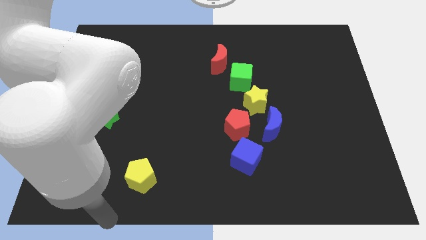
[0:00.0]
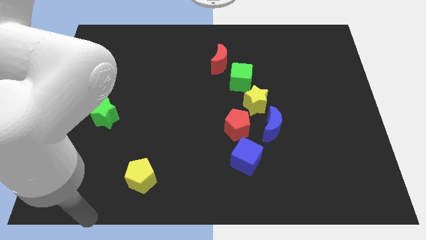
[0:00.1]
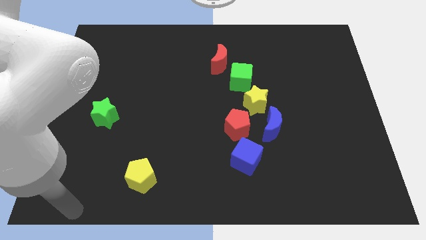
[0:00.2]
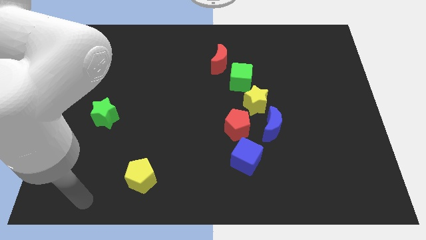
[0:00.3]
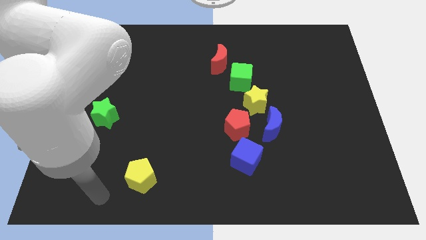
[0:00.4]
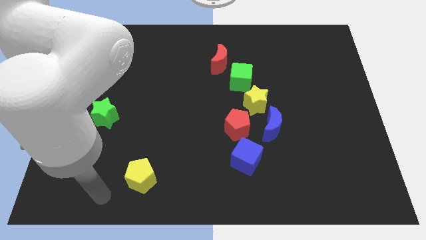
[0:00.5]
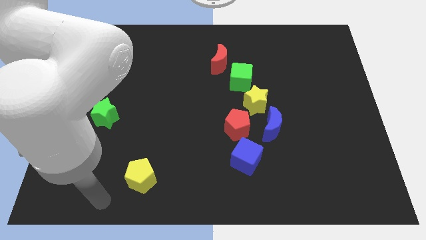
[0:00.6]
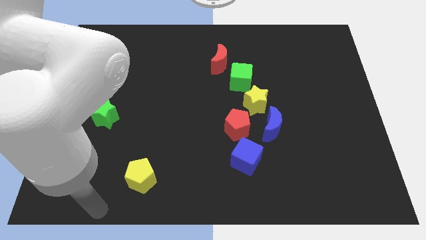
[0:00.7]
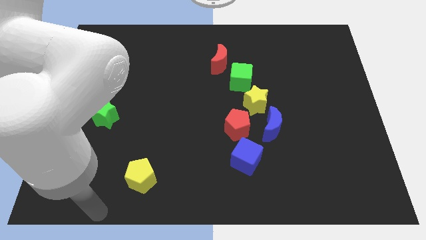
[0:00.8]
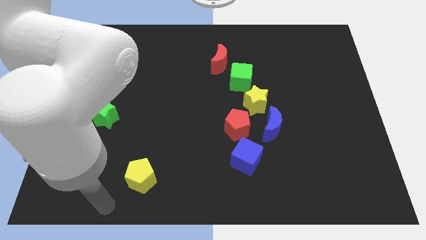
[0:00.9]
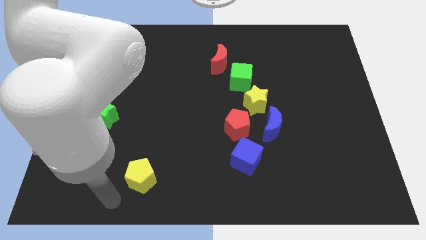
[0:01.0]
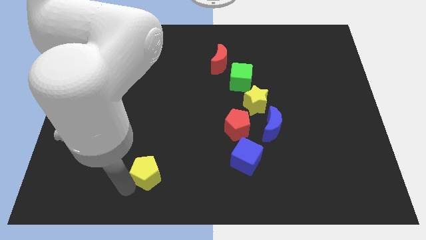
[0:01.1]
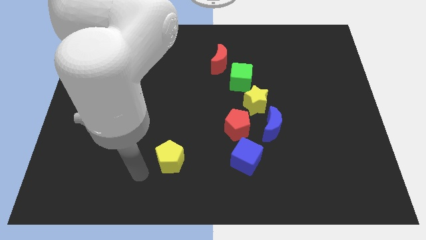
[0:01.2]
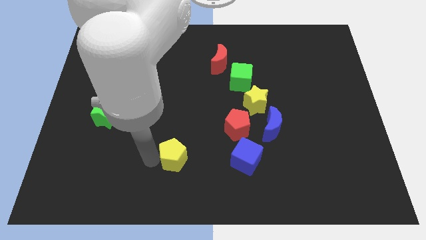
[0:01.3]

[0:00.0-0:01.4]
push the yellow pentagon horizontally to the left side of the blue cube

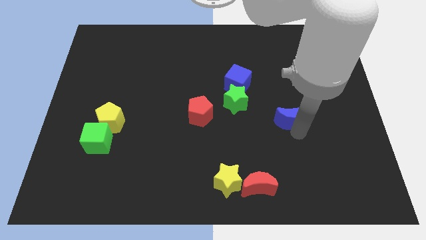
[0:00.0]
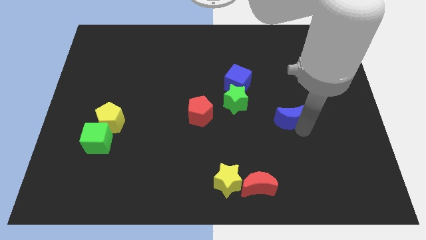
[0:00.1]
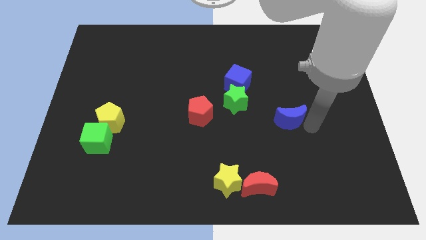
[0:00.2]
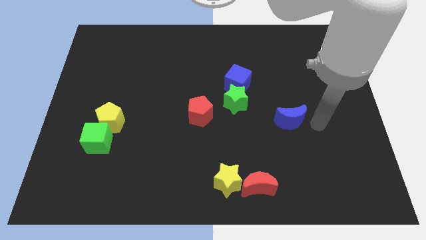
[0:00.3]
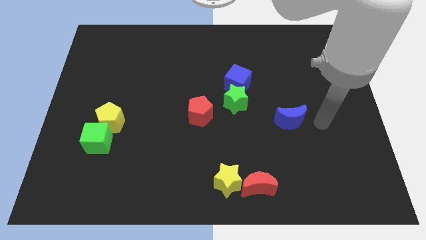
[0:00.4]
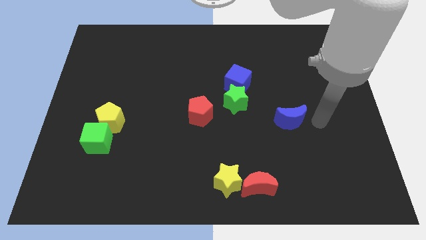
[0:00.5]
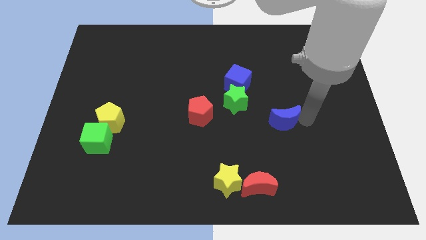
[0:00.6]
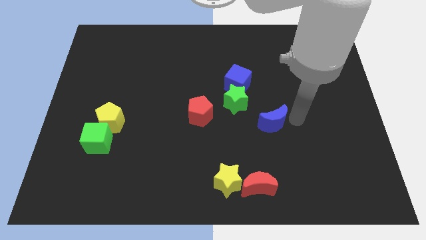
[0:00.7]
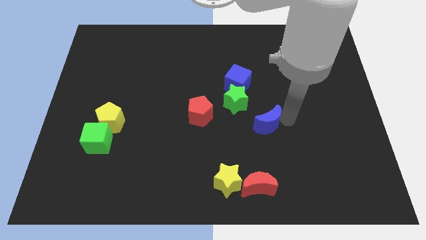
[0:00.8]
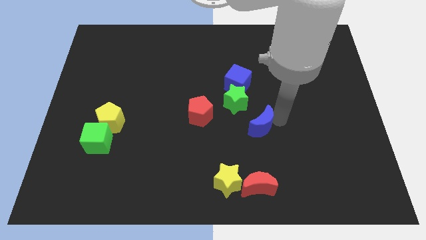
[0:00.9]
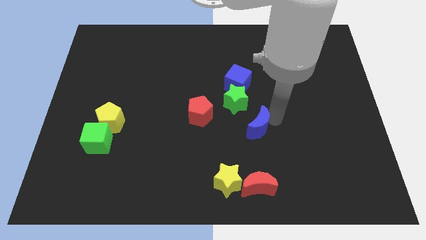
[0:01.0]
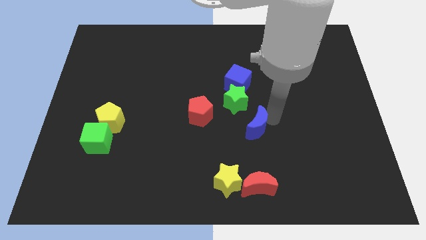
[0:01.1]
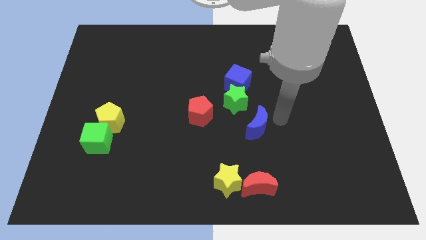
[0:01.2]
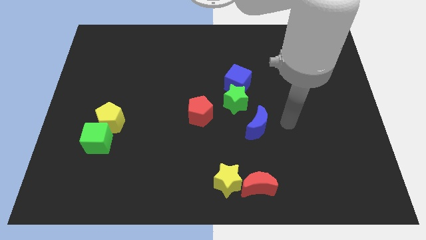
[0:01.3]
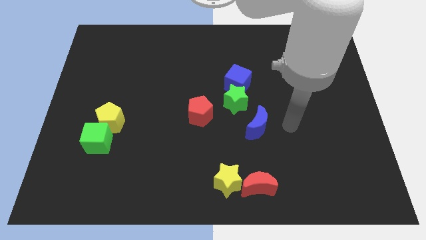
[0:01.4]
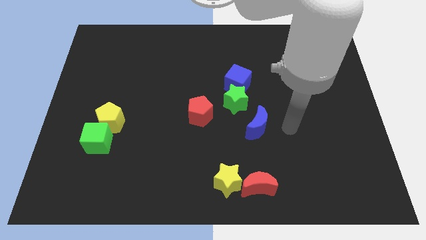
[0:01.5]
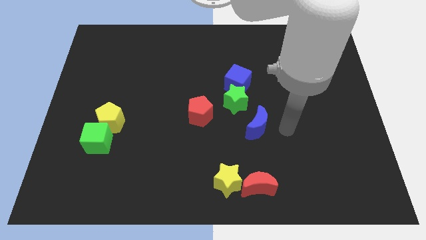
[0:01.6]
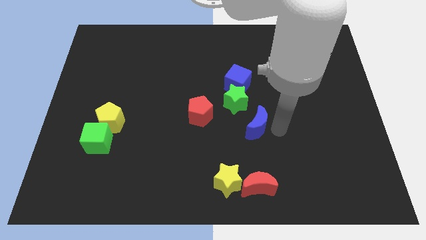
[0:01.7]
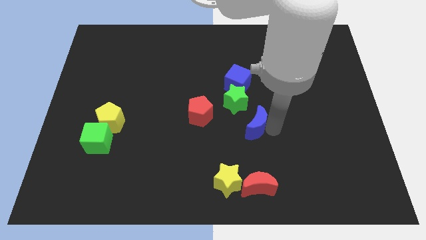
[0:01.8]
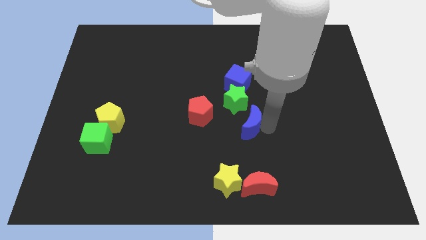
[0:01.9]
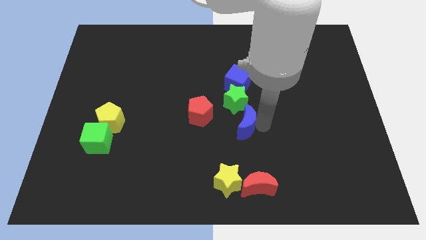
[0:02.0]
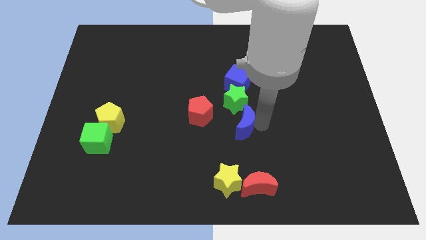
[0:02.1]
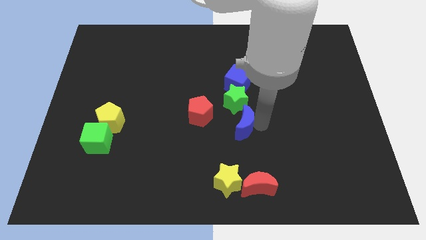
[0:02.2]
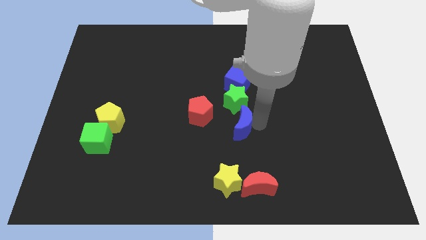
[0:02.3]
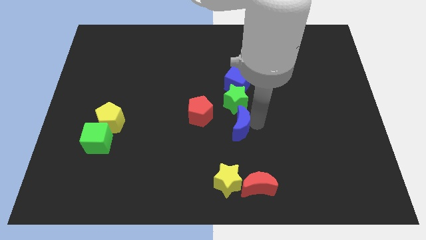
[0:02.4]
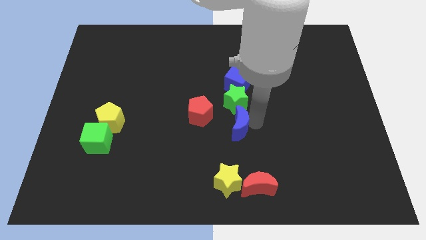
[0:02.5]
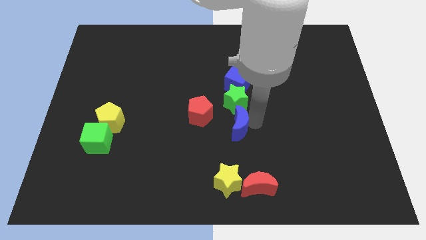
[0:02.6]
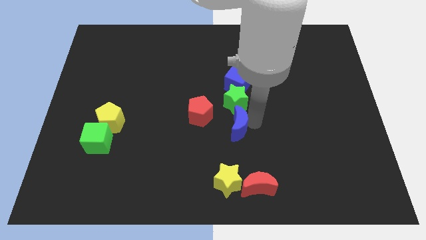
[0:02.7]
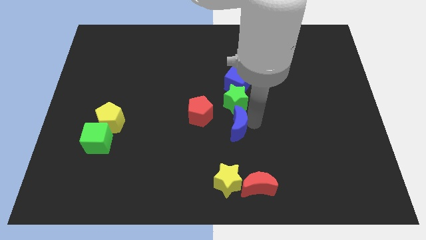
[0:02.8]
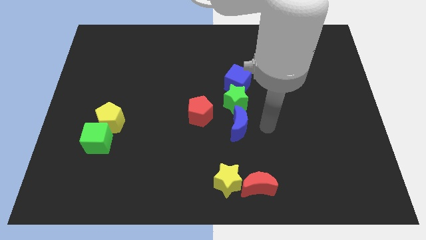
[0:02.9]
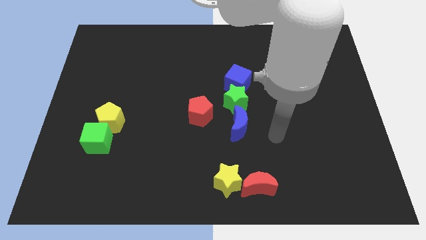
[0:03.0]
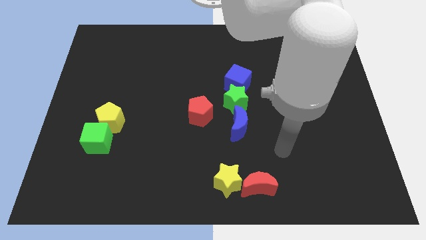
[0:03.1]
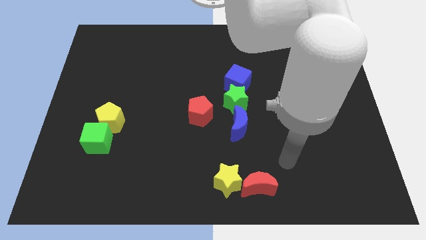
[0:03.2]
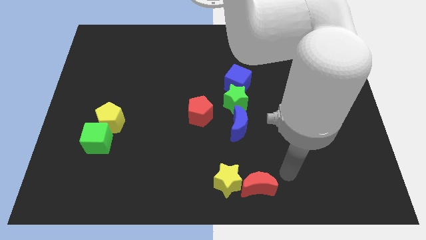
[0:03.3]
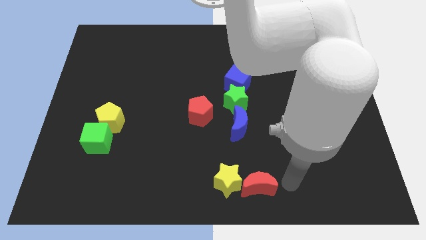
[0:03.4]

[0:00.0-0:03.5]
place blue moon below green star

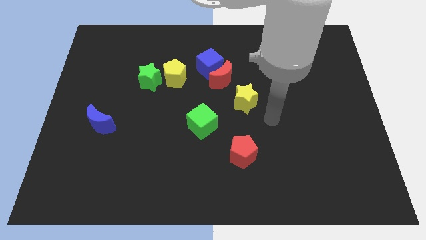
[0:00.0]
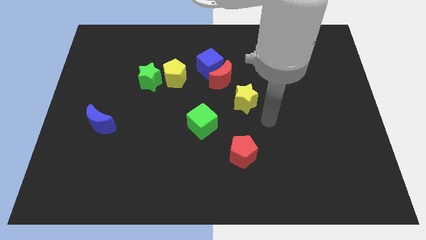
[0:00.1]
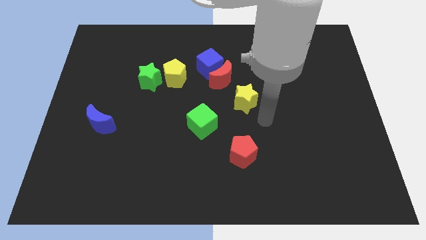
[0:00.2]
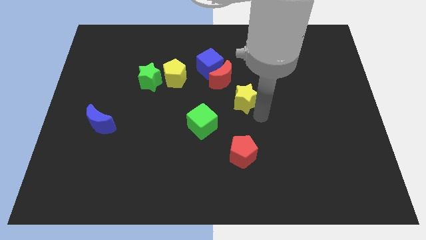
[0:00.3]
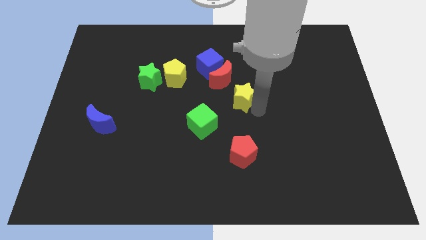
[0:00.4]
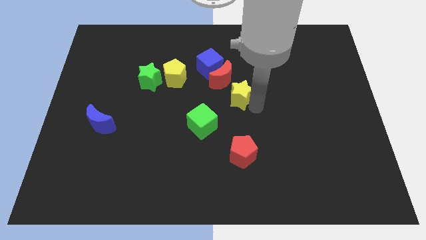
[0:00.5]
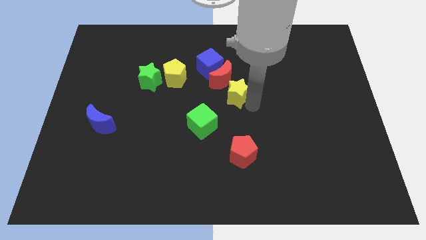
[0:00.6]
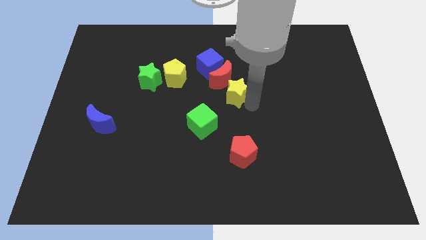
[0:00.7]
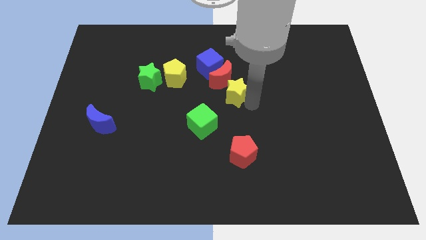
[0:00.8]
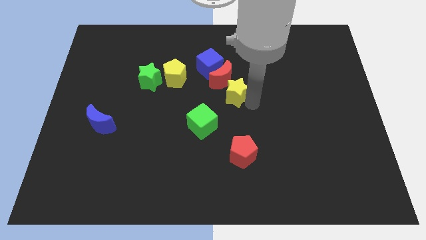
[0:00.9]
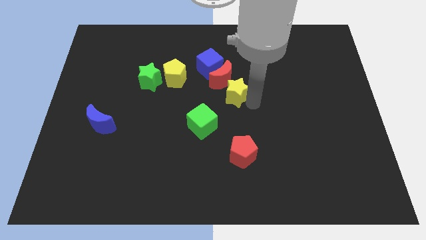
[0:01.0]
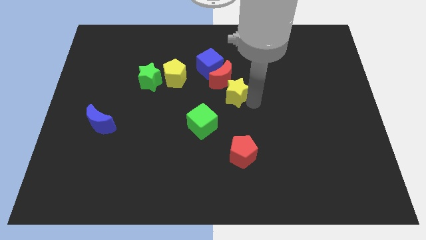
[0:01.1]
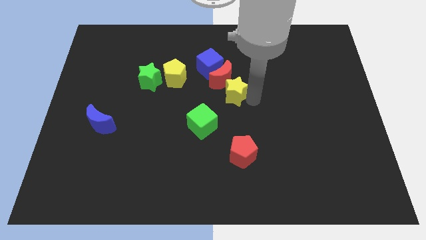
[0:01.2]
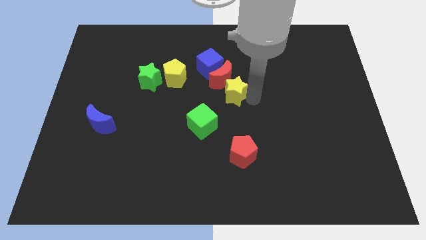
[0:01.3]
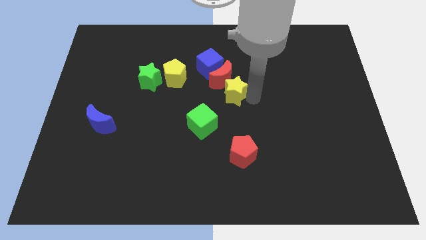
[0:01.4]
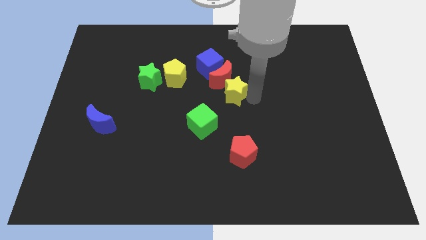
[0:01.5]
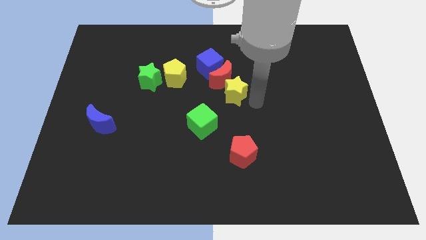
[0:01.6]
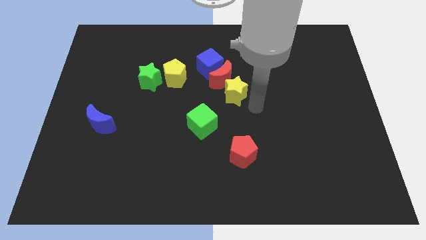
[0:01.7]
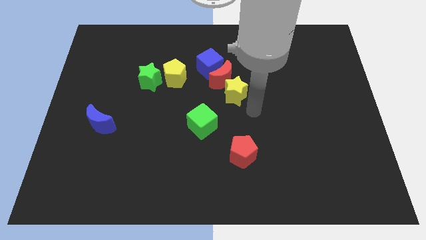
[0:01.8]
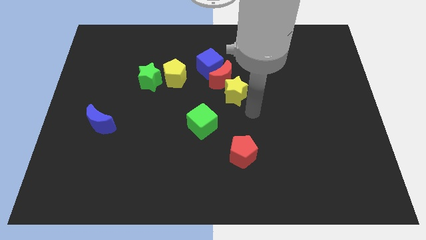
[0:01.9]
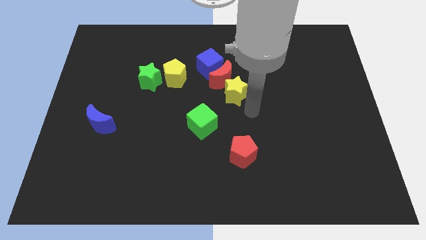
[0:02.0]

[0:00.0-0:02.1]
move the yellow star to the bottom of the red crescent

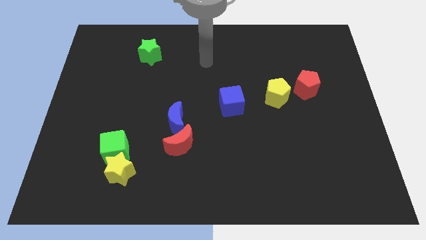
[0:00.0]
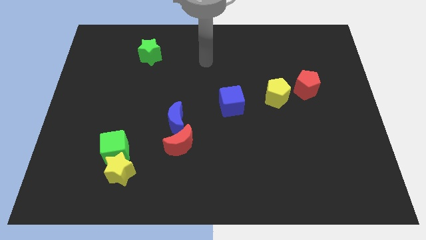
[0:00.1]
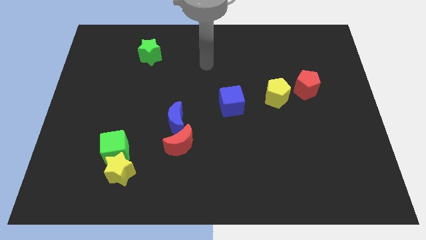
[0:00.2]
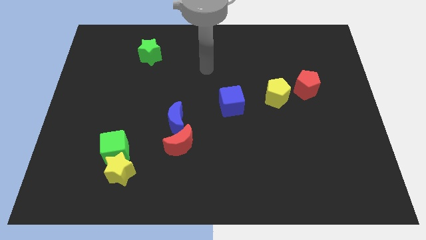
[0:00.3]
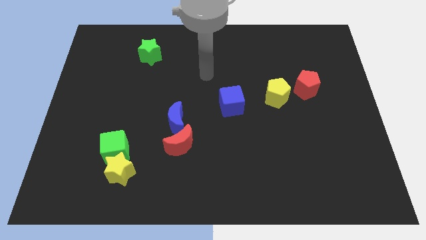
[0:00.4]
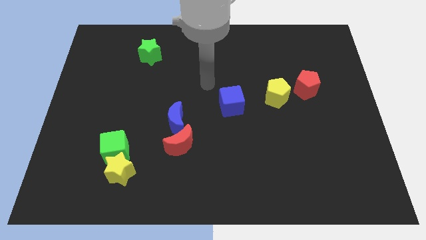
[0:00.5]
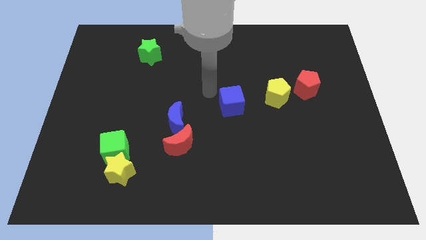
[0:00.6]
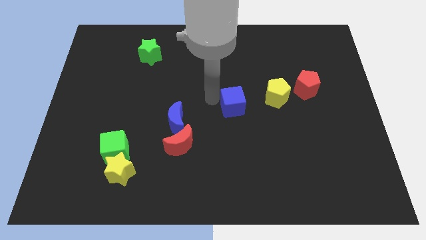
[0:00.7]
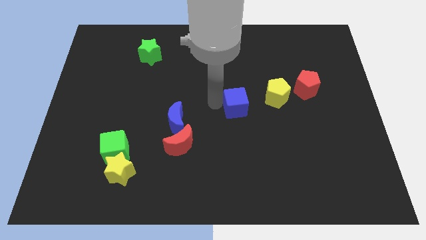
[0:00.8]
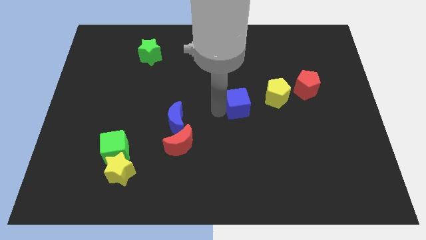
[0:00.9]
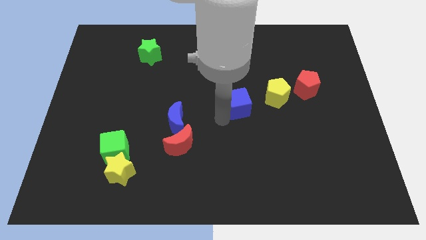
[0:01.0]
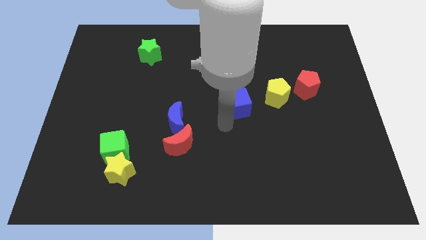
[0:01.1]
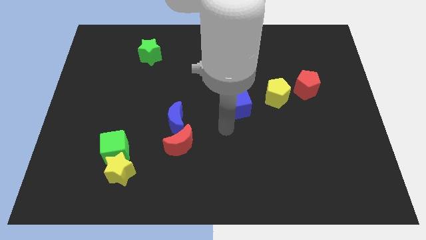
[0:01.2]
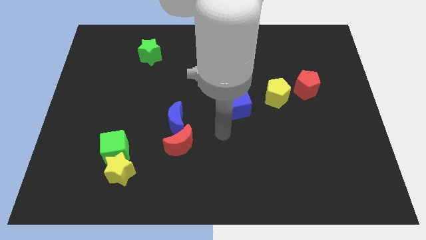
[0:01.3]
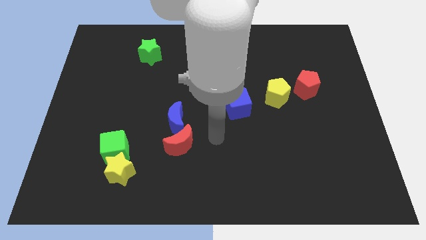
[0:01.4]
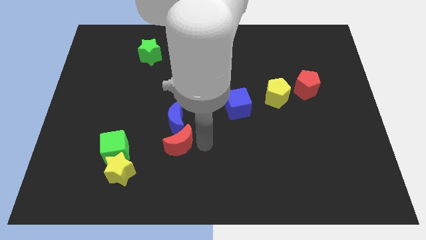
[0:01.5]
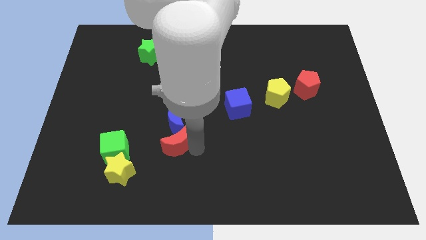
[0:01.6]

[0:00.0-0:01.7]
slightly touch left to the blue cube
